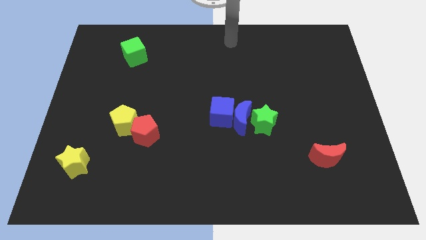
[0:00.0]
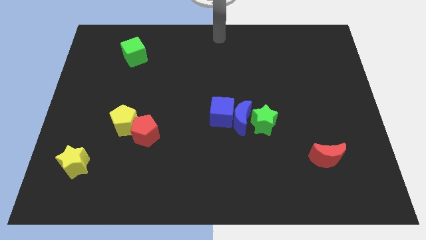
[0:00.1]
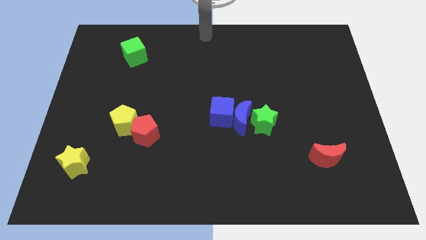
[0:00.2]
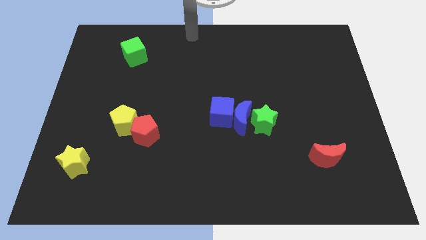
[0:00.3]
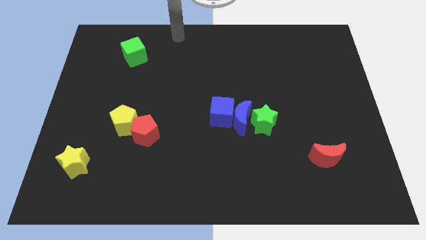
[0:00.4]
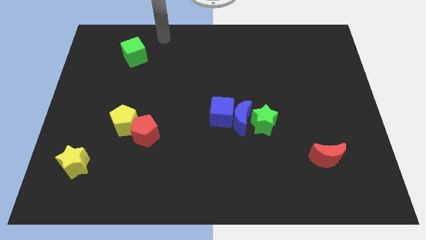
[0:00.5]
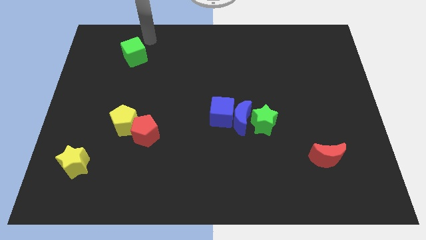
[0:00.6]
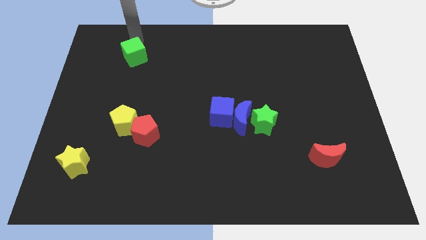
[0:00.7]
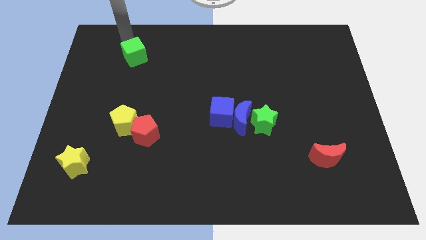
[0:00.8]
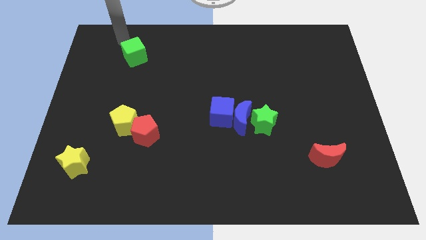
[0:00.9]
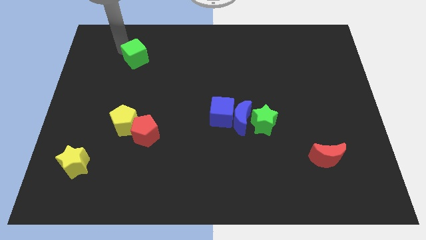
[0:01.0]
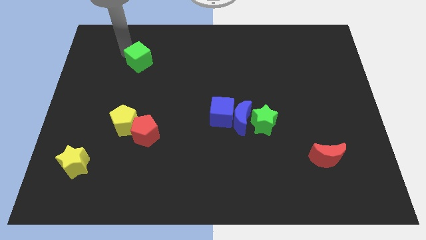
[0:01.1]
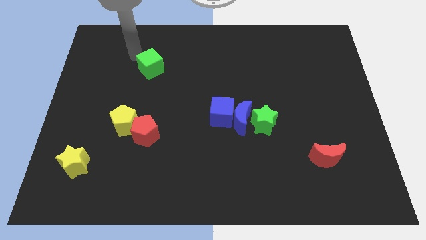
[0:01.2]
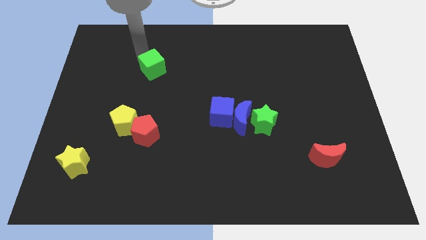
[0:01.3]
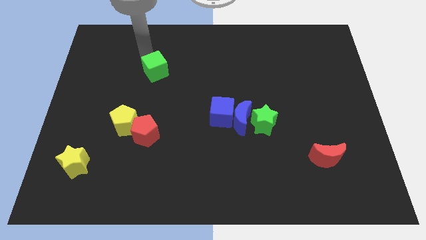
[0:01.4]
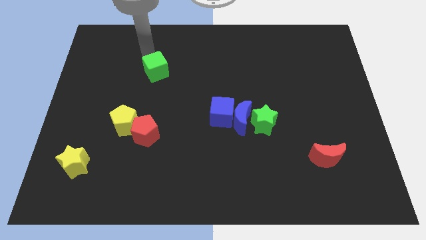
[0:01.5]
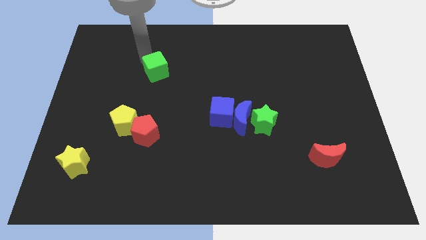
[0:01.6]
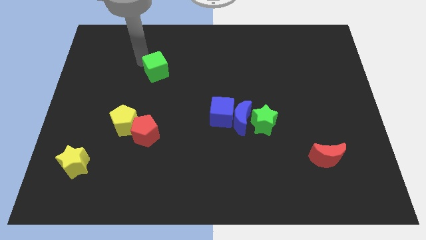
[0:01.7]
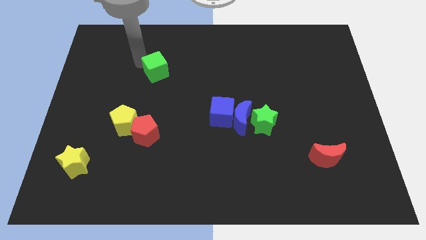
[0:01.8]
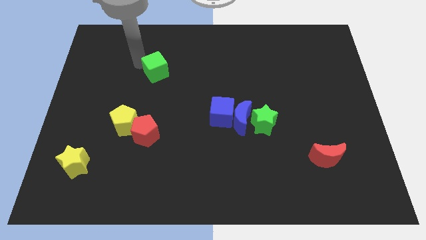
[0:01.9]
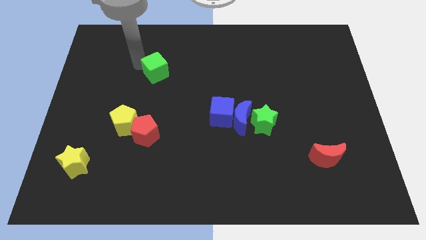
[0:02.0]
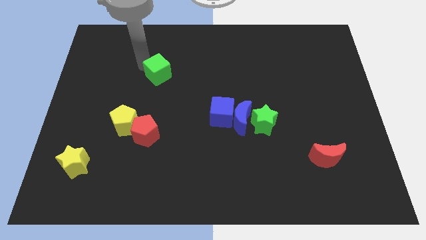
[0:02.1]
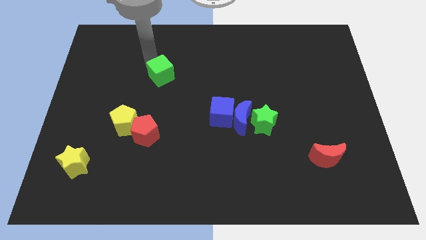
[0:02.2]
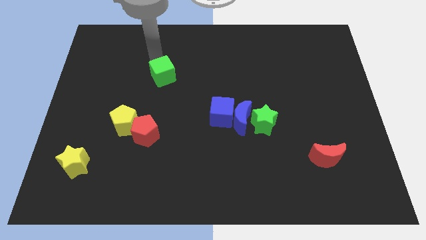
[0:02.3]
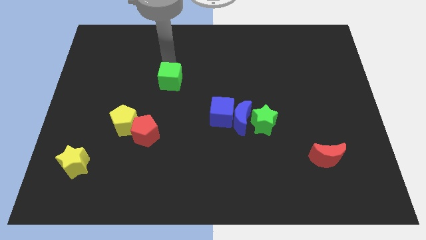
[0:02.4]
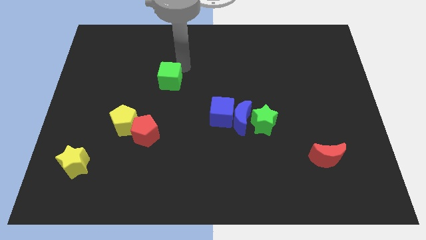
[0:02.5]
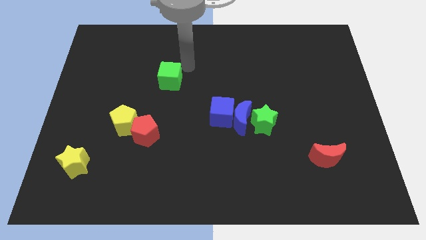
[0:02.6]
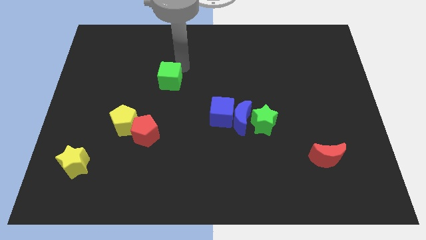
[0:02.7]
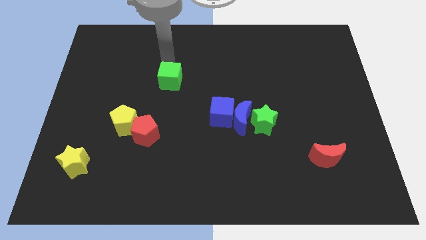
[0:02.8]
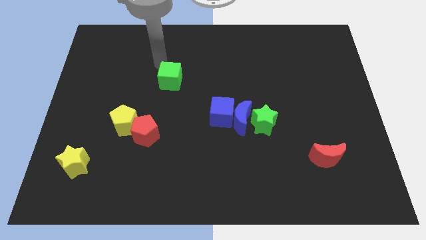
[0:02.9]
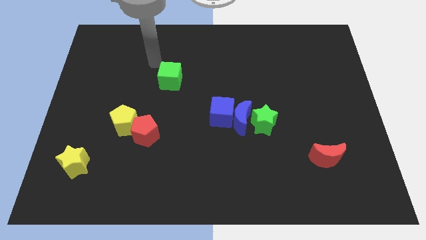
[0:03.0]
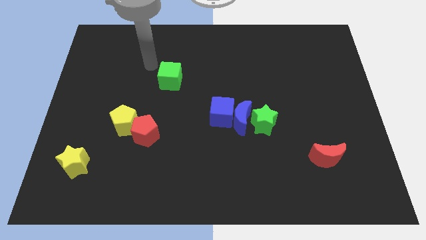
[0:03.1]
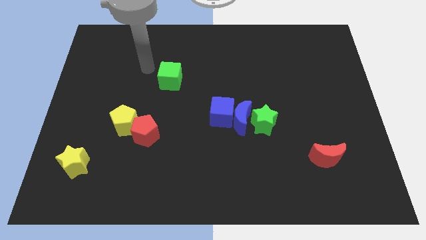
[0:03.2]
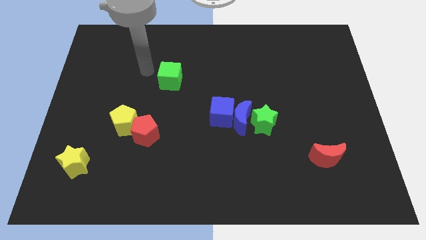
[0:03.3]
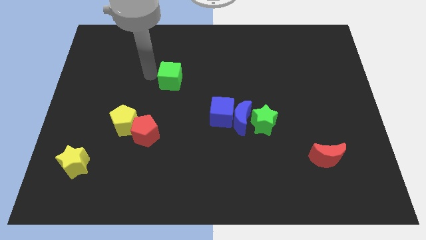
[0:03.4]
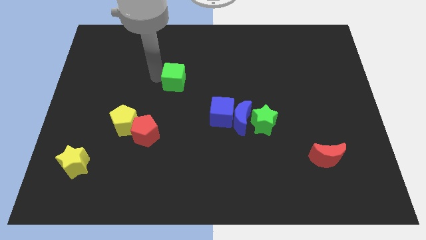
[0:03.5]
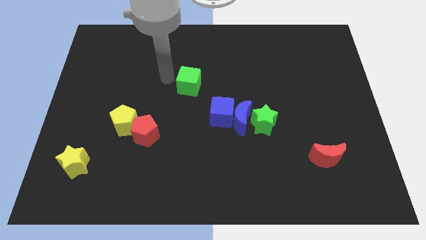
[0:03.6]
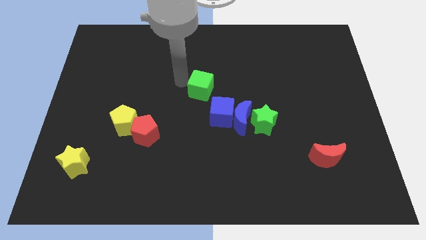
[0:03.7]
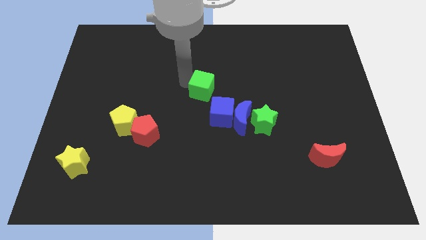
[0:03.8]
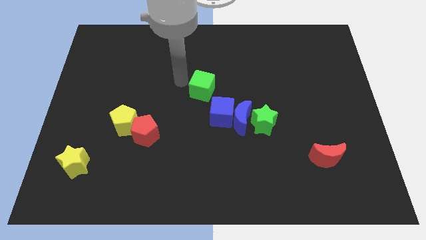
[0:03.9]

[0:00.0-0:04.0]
move the green cube slightly towards the blue cube

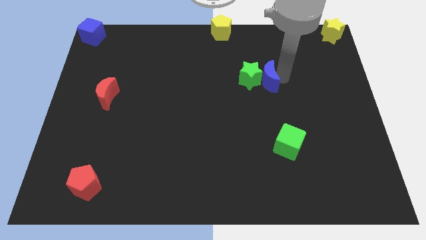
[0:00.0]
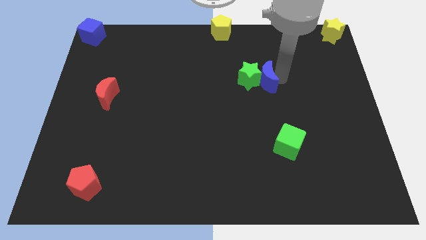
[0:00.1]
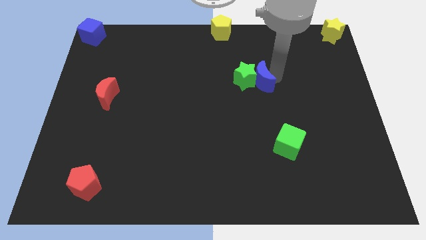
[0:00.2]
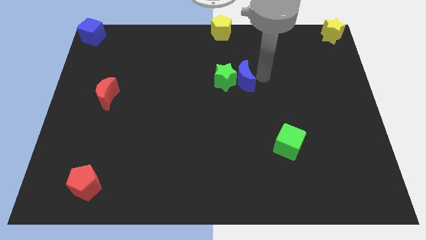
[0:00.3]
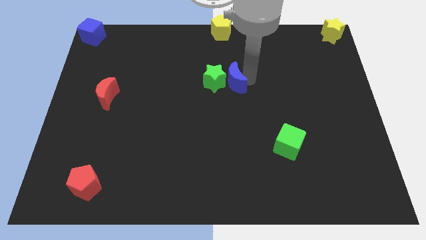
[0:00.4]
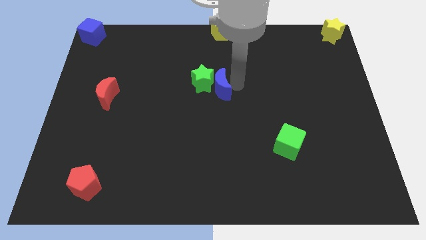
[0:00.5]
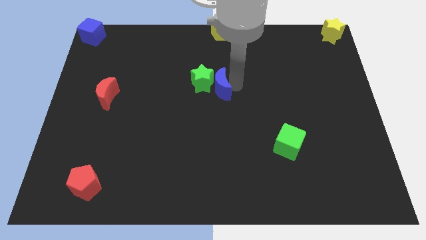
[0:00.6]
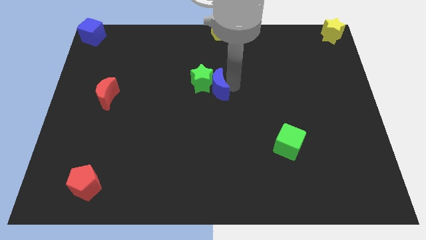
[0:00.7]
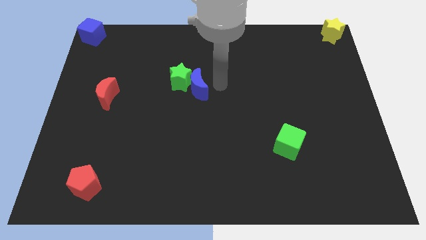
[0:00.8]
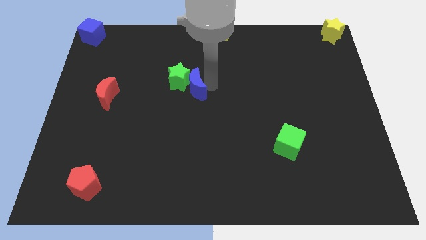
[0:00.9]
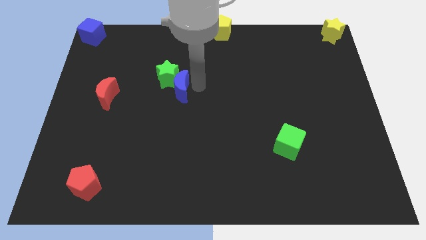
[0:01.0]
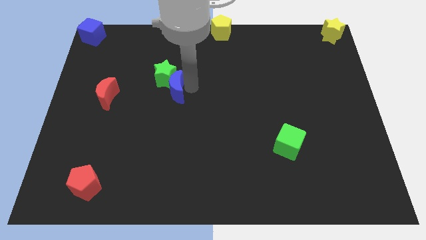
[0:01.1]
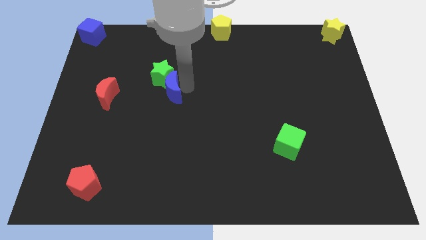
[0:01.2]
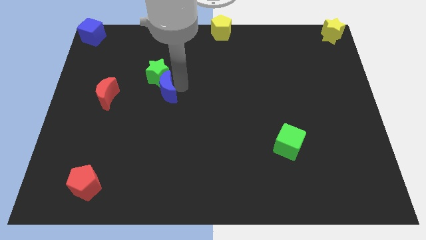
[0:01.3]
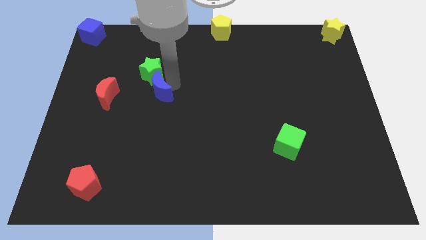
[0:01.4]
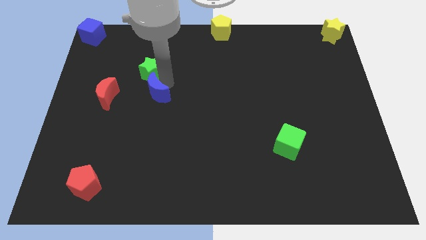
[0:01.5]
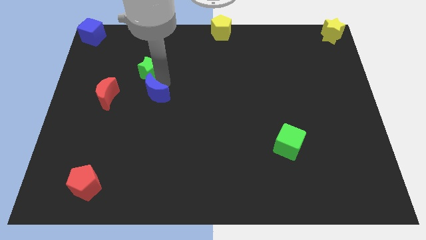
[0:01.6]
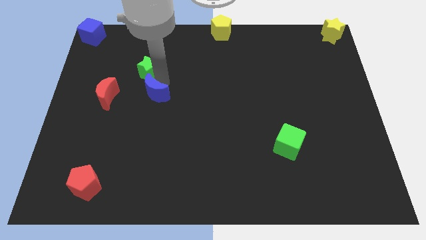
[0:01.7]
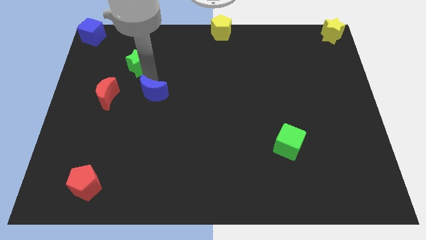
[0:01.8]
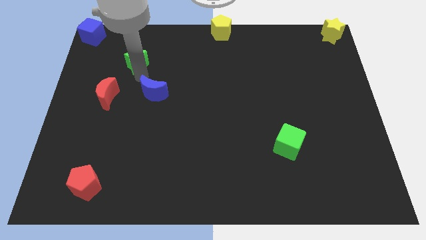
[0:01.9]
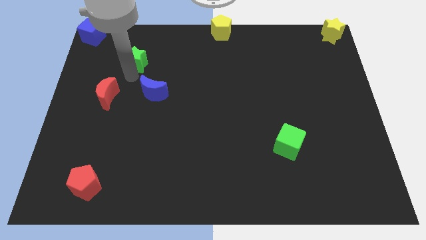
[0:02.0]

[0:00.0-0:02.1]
move blue moon near green star

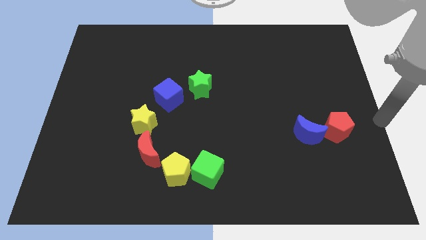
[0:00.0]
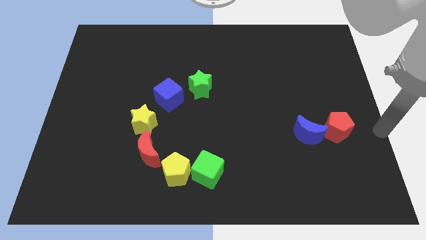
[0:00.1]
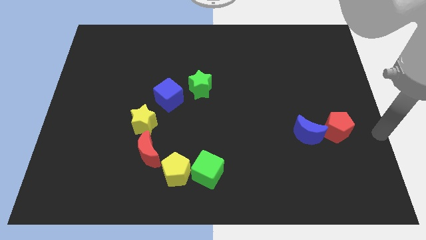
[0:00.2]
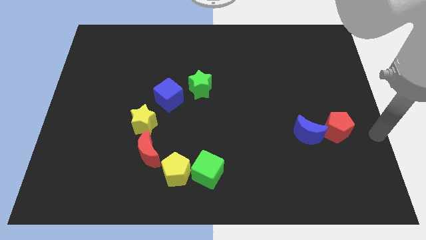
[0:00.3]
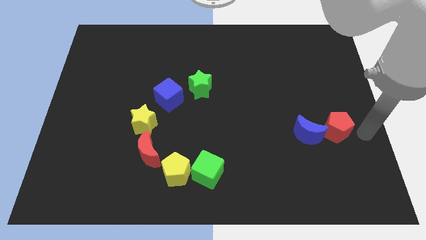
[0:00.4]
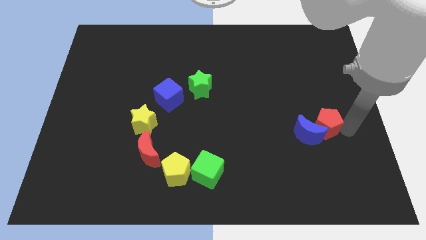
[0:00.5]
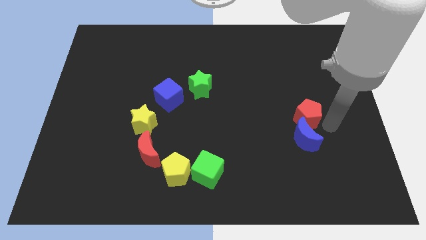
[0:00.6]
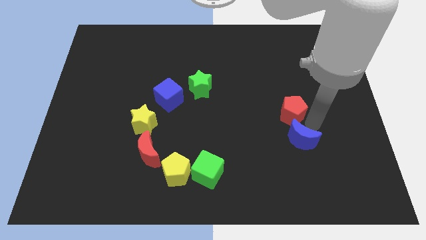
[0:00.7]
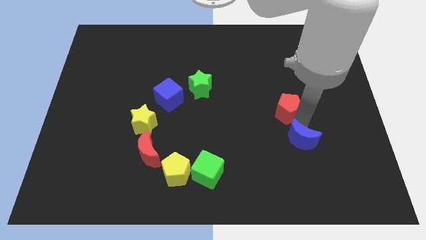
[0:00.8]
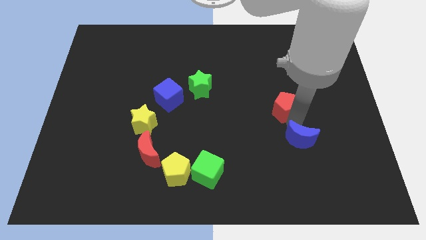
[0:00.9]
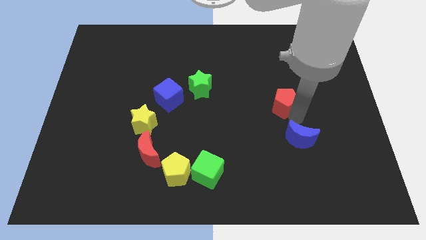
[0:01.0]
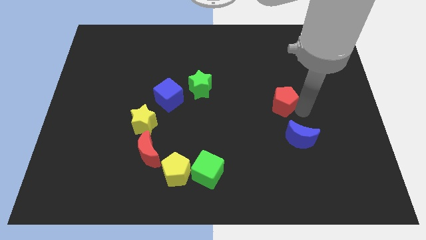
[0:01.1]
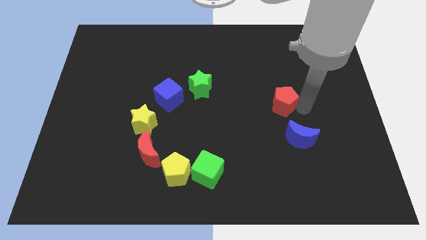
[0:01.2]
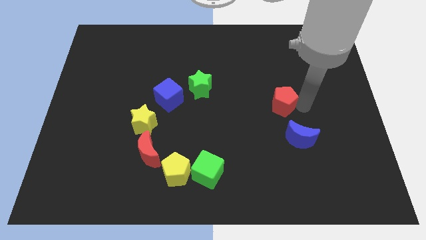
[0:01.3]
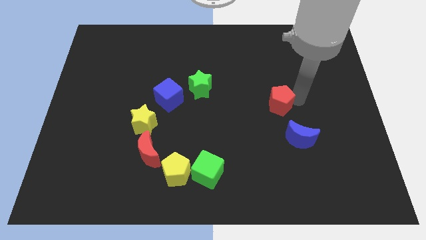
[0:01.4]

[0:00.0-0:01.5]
move the red pentagon away from the blue crescent

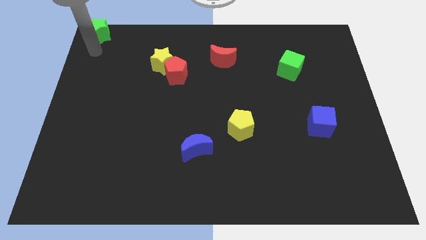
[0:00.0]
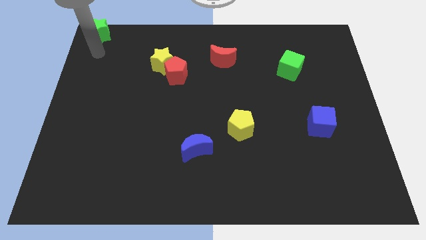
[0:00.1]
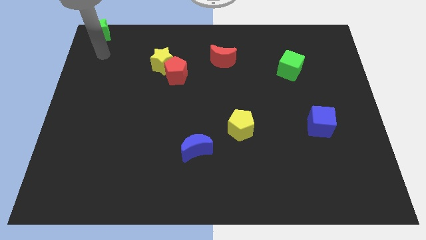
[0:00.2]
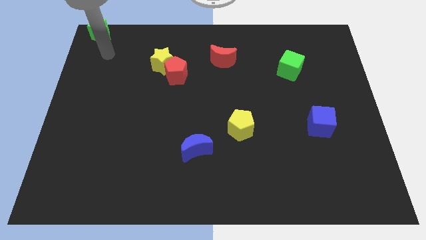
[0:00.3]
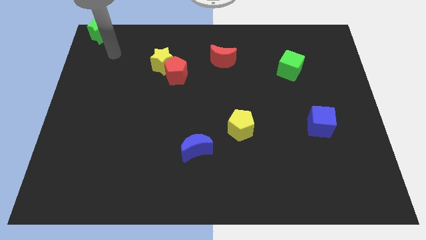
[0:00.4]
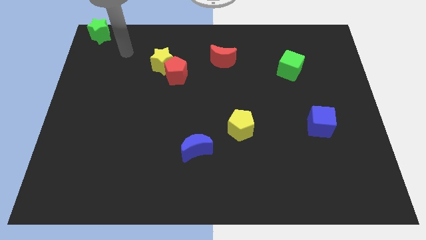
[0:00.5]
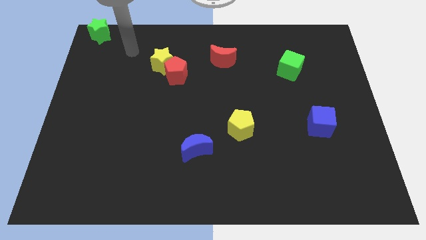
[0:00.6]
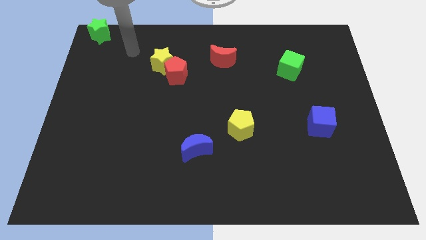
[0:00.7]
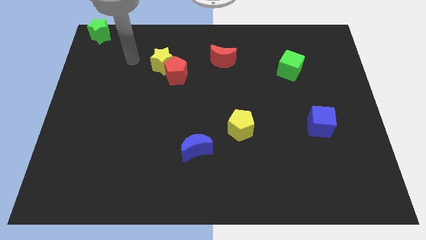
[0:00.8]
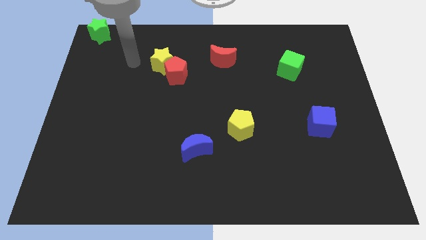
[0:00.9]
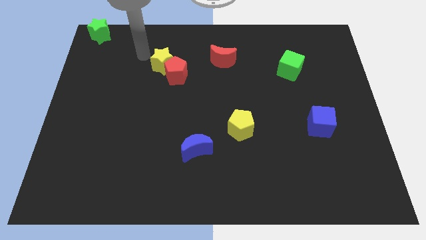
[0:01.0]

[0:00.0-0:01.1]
move the arm away from the green star

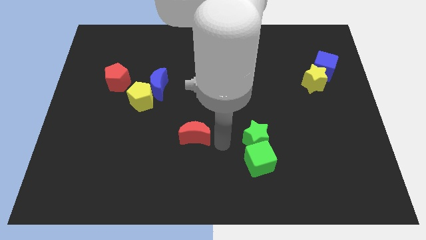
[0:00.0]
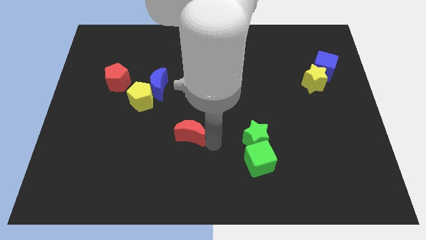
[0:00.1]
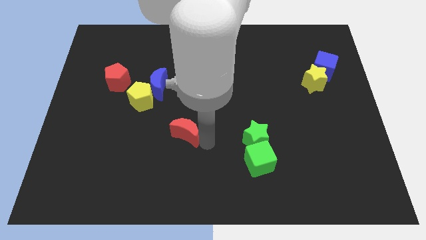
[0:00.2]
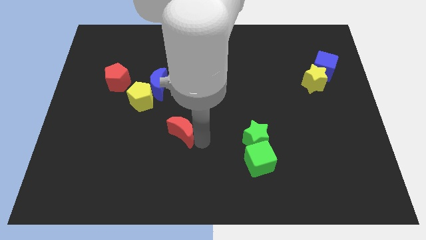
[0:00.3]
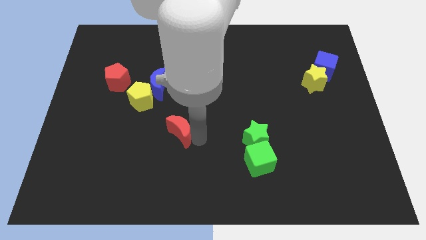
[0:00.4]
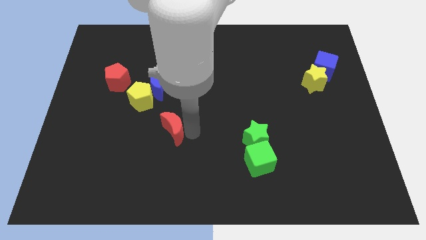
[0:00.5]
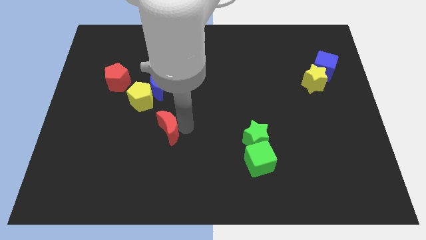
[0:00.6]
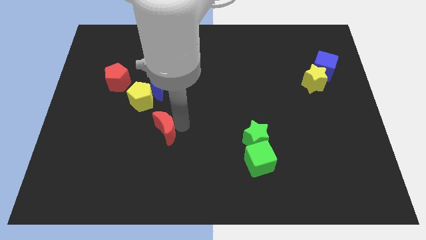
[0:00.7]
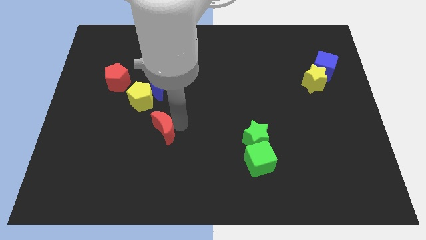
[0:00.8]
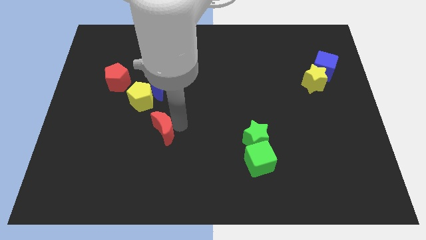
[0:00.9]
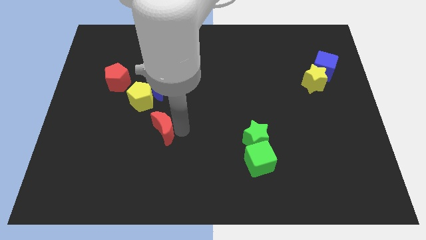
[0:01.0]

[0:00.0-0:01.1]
put the red moon below the blue moon
